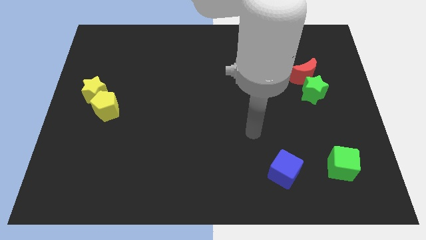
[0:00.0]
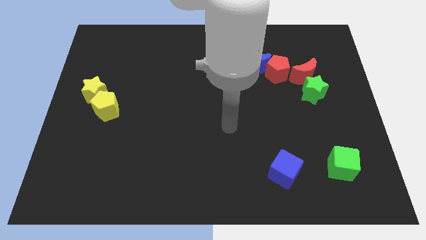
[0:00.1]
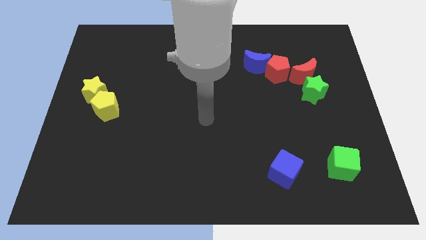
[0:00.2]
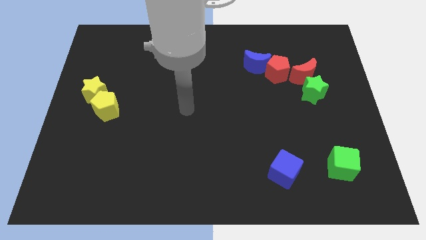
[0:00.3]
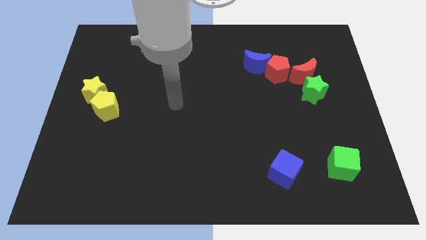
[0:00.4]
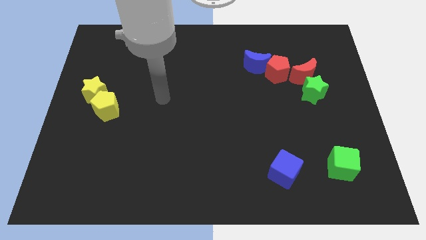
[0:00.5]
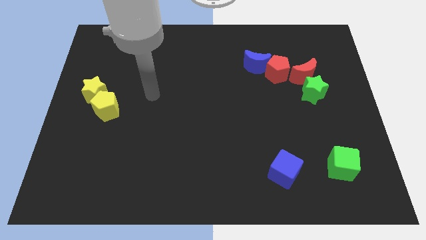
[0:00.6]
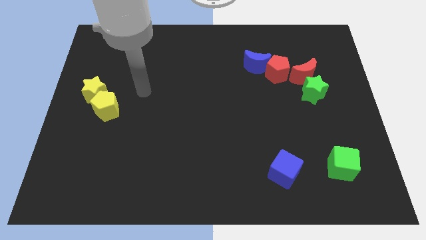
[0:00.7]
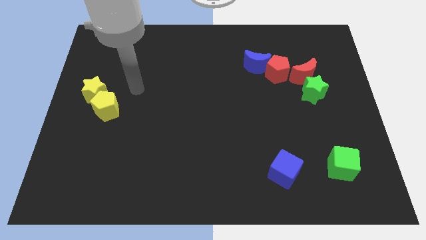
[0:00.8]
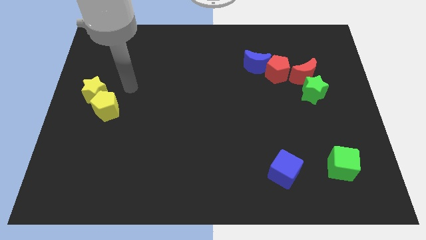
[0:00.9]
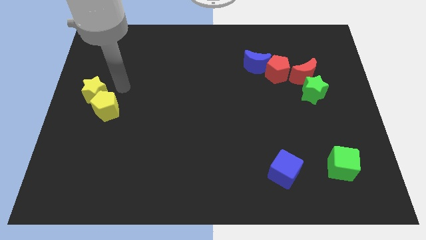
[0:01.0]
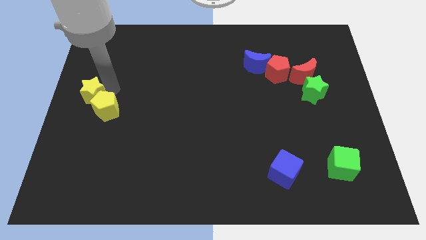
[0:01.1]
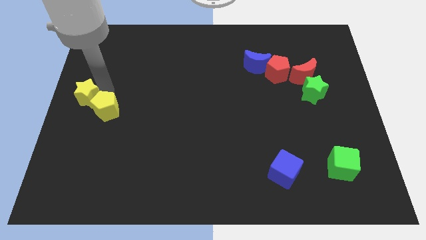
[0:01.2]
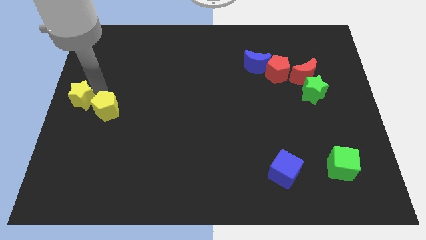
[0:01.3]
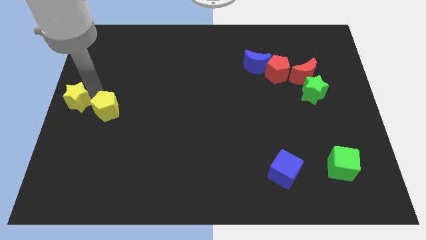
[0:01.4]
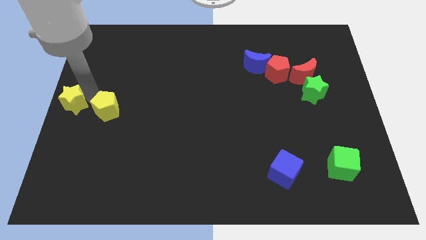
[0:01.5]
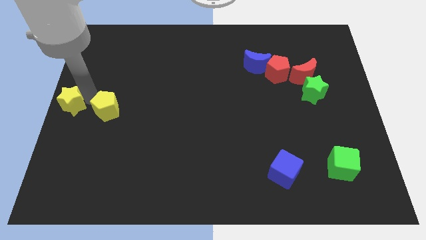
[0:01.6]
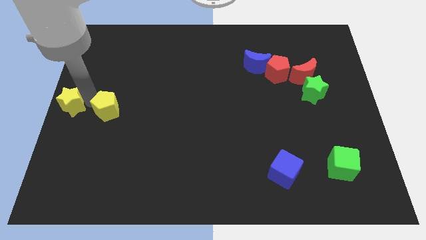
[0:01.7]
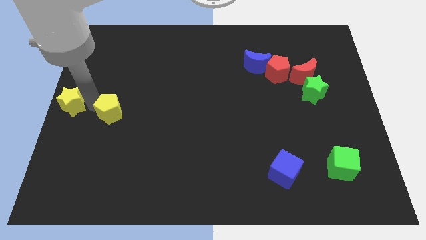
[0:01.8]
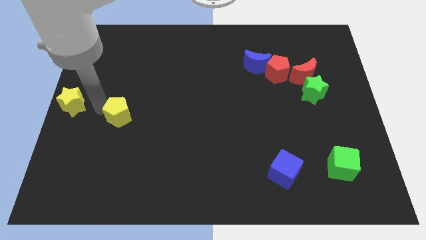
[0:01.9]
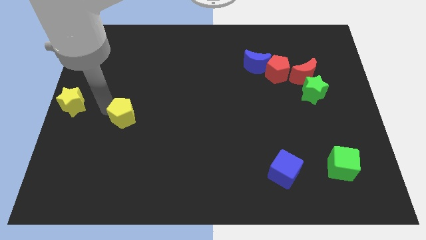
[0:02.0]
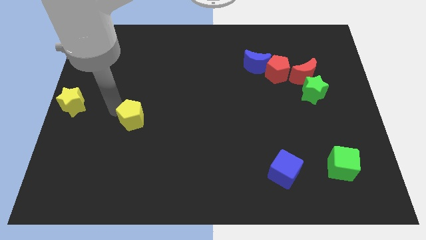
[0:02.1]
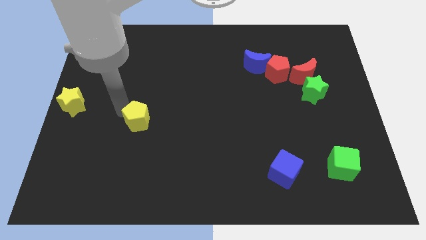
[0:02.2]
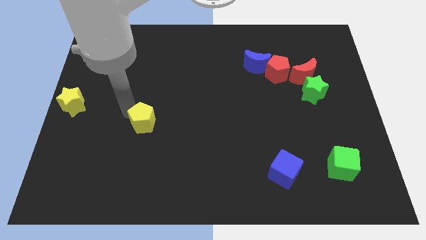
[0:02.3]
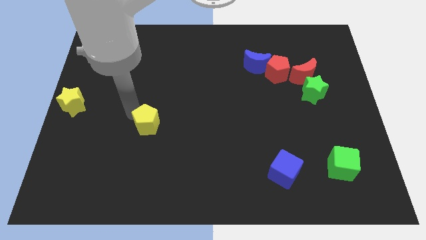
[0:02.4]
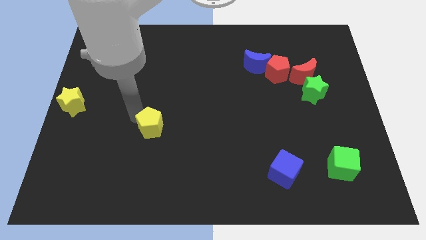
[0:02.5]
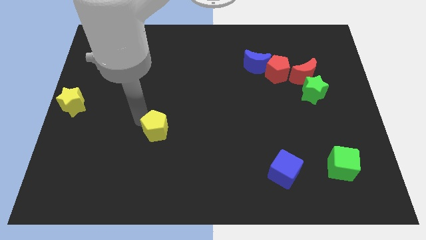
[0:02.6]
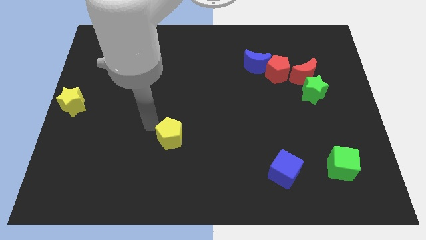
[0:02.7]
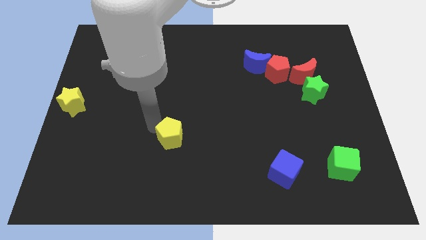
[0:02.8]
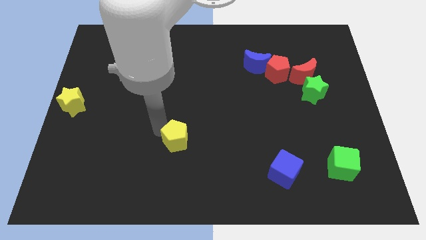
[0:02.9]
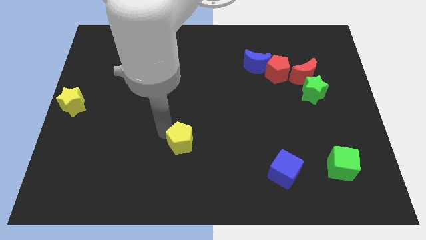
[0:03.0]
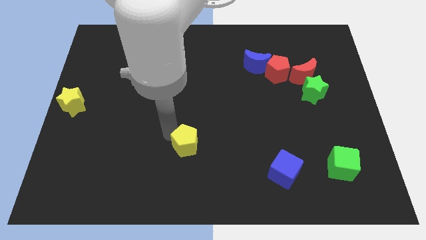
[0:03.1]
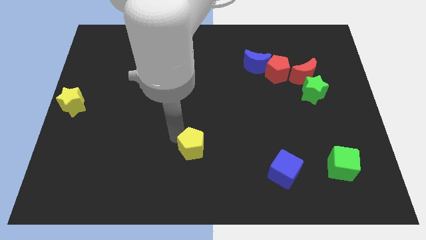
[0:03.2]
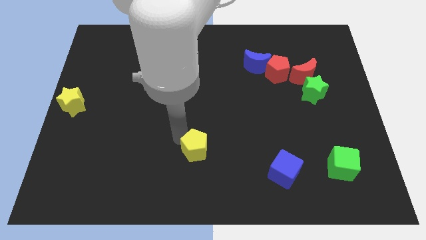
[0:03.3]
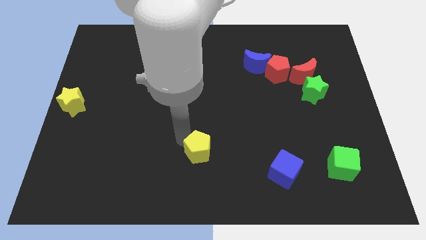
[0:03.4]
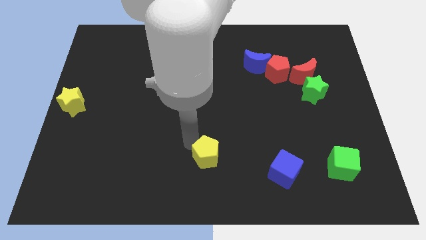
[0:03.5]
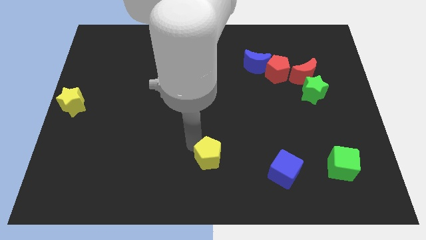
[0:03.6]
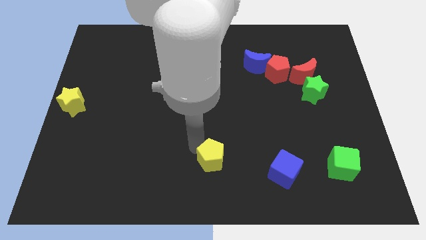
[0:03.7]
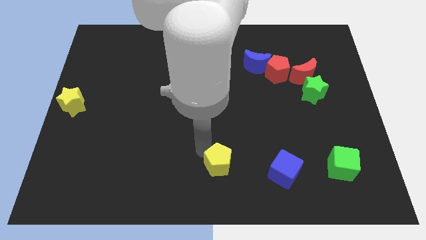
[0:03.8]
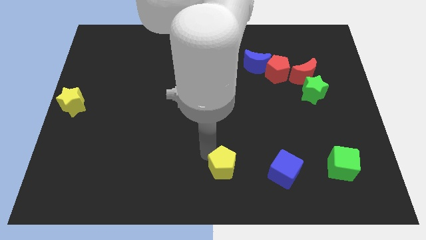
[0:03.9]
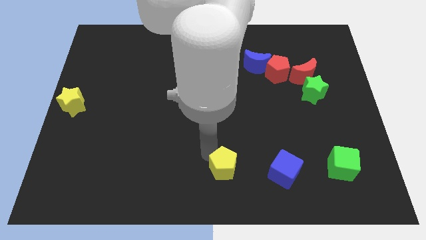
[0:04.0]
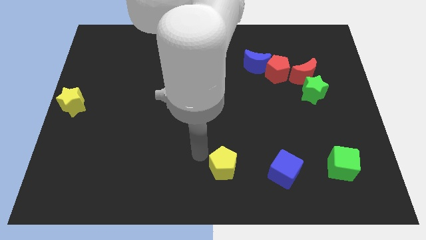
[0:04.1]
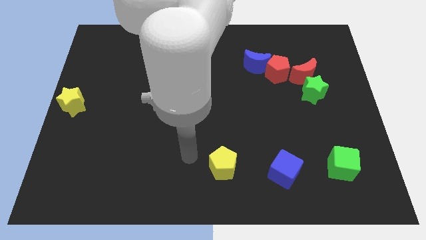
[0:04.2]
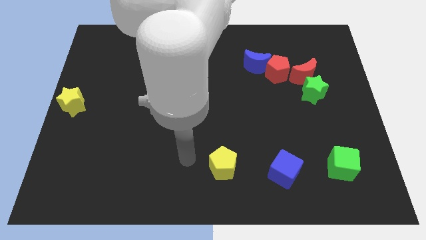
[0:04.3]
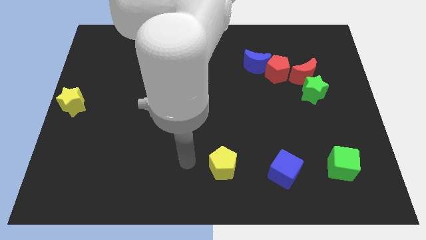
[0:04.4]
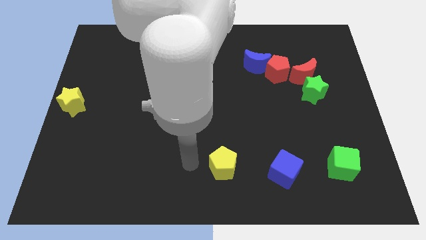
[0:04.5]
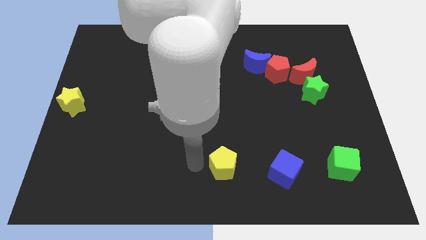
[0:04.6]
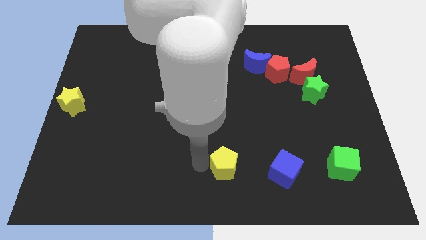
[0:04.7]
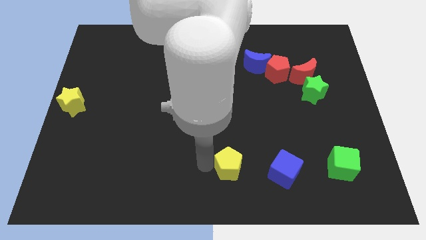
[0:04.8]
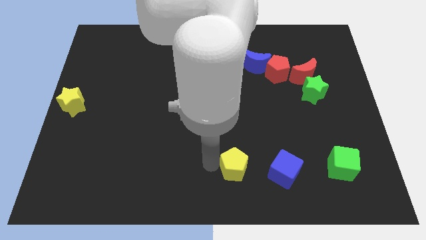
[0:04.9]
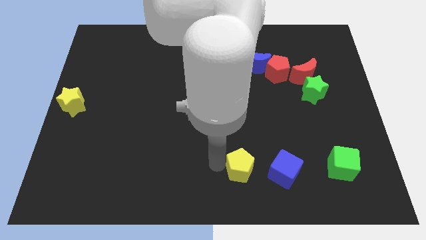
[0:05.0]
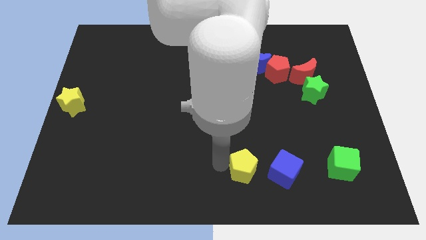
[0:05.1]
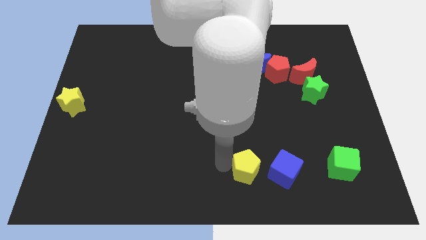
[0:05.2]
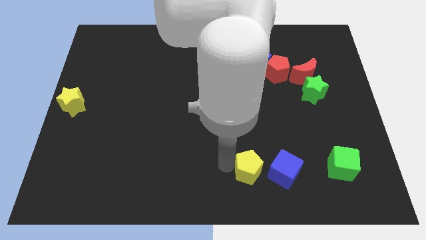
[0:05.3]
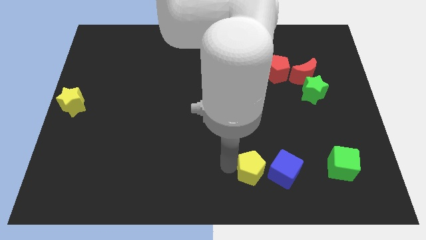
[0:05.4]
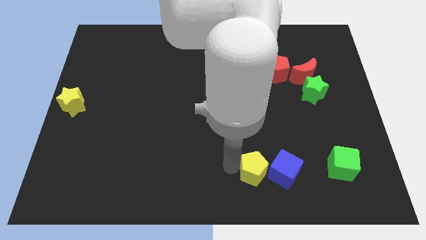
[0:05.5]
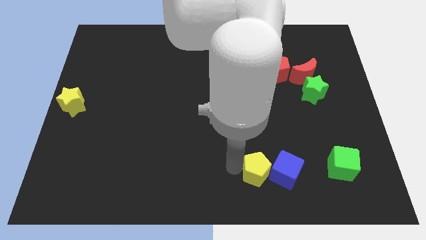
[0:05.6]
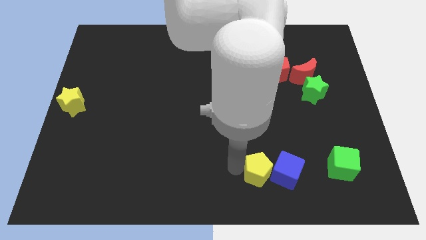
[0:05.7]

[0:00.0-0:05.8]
push the yellow pentagon next to the blue cube

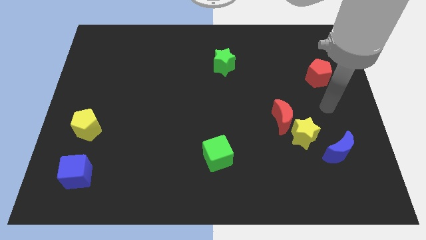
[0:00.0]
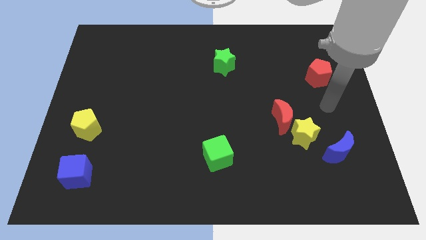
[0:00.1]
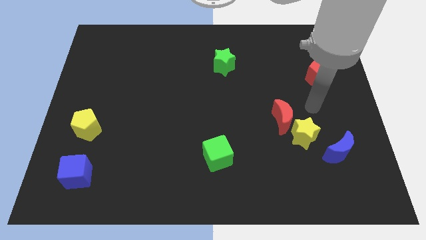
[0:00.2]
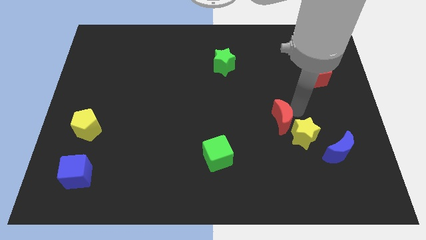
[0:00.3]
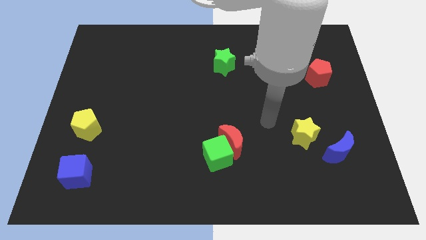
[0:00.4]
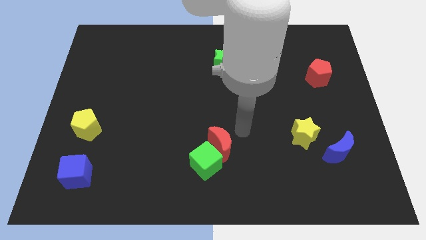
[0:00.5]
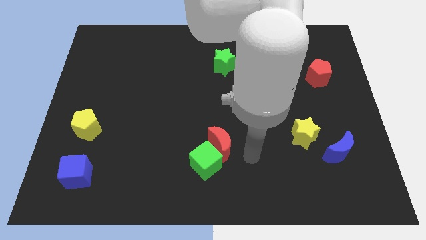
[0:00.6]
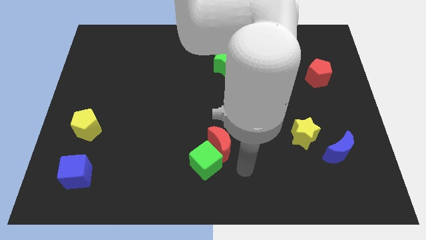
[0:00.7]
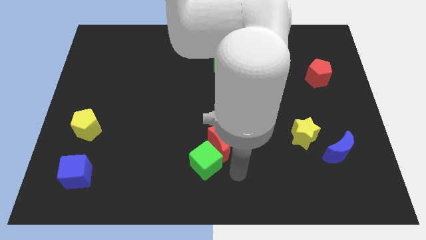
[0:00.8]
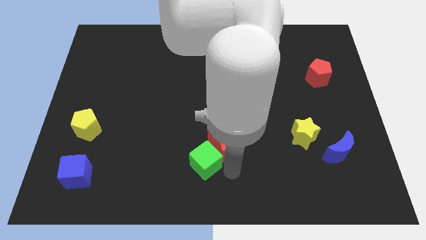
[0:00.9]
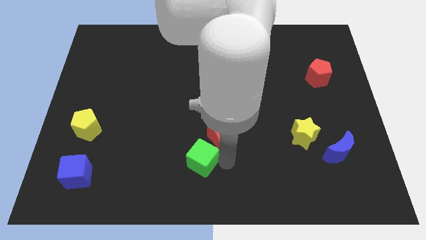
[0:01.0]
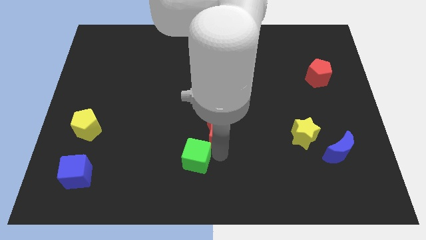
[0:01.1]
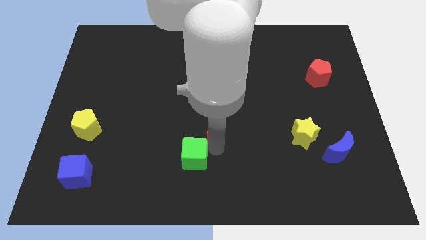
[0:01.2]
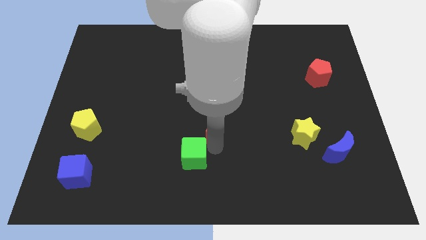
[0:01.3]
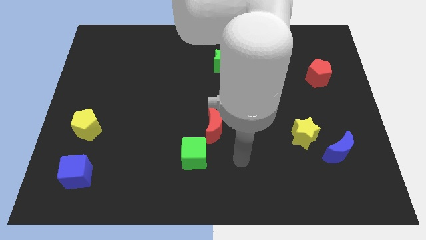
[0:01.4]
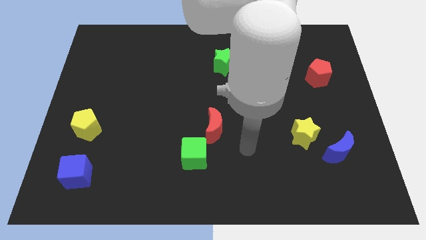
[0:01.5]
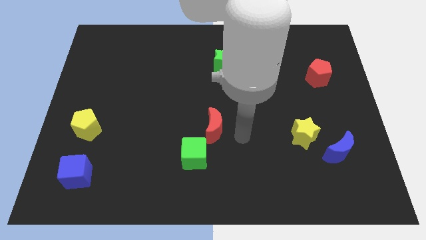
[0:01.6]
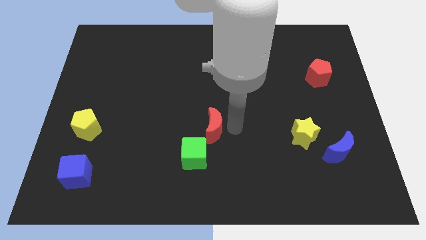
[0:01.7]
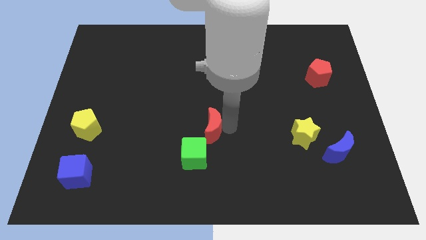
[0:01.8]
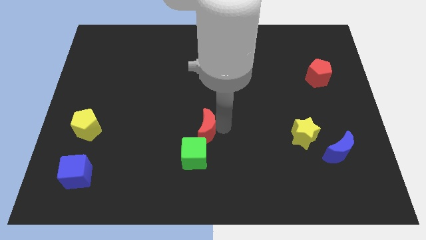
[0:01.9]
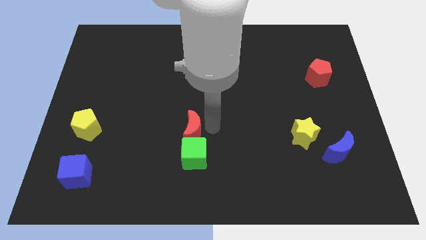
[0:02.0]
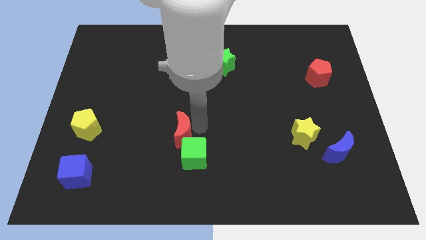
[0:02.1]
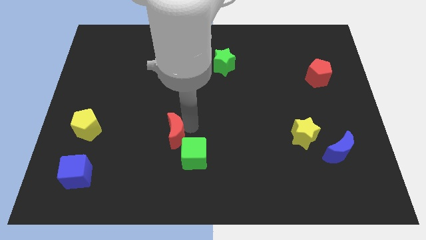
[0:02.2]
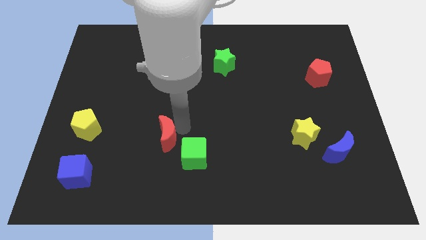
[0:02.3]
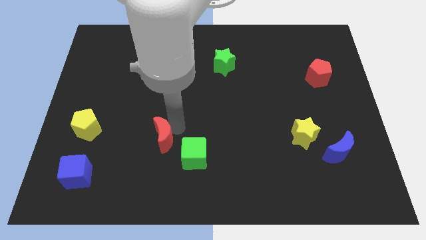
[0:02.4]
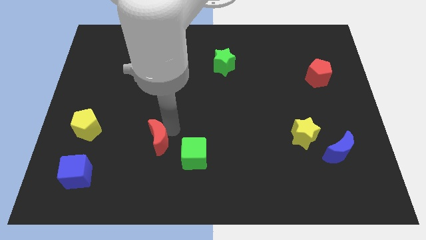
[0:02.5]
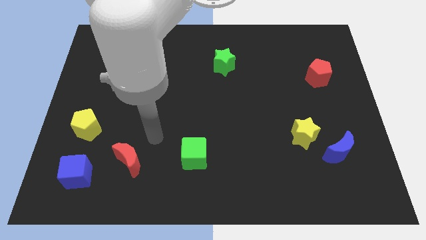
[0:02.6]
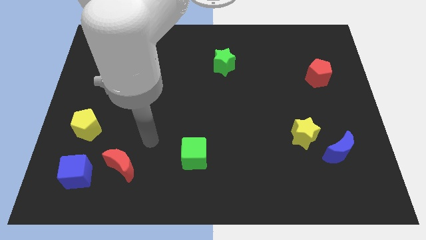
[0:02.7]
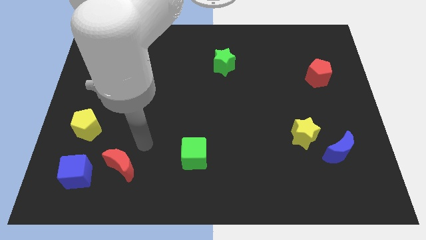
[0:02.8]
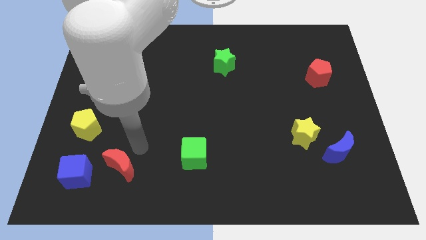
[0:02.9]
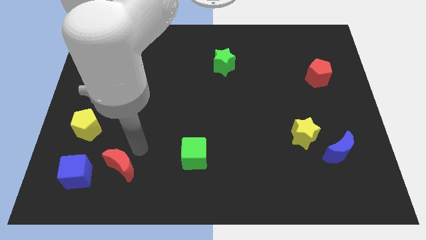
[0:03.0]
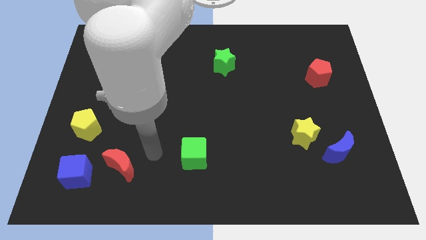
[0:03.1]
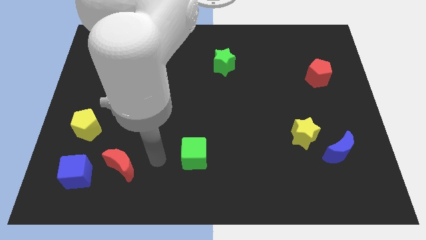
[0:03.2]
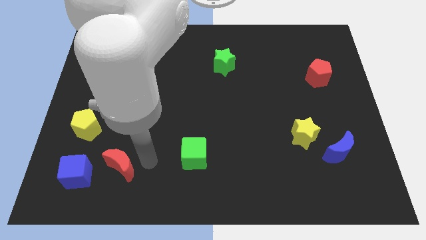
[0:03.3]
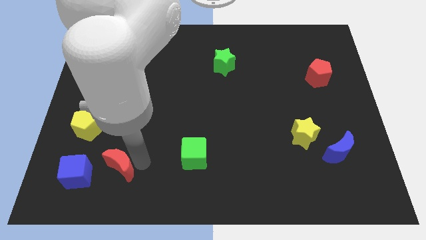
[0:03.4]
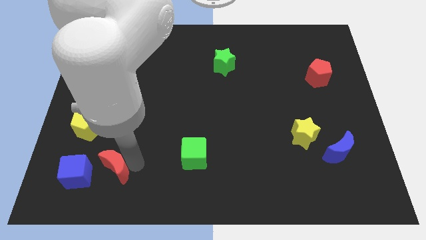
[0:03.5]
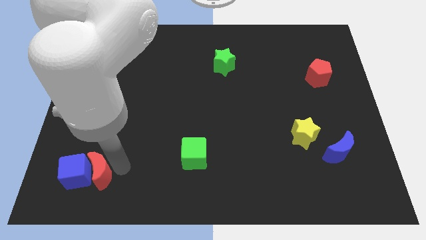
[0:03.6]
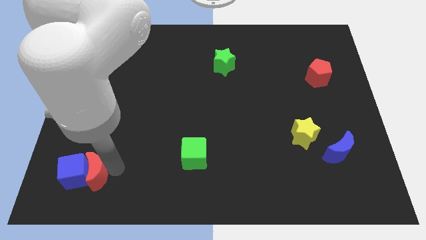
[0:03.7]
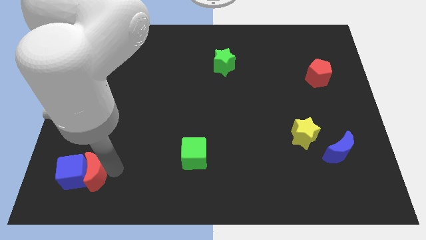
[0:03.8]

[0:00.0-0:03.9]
slide the red moon to the blue cube
